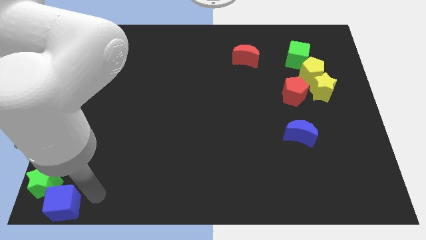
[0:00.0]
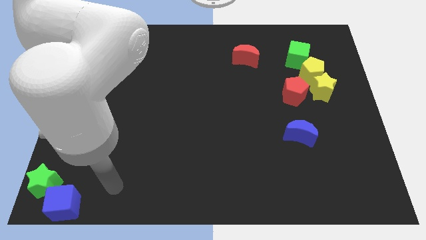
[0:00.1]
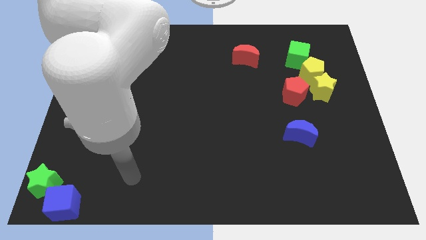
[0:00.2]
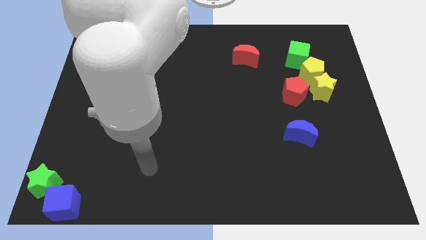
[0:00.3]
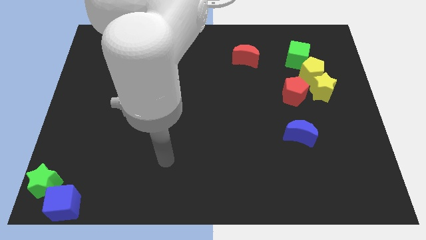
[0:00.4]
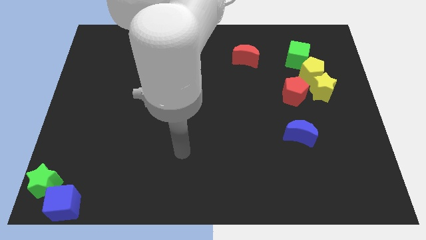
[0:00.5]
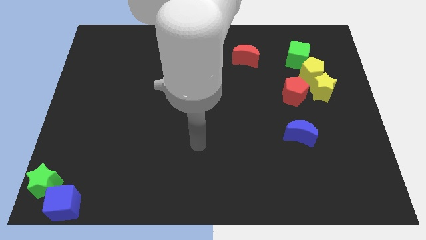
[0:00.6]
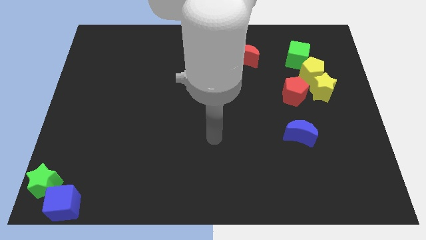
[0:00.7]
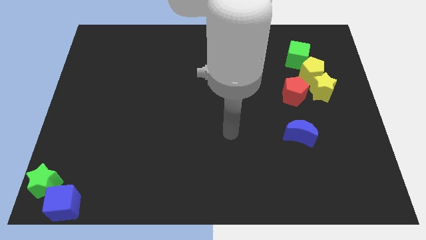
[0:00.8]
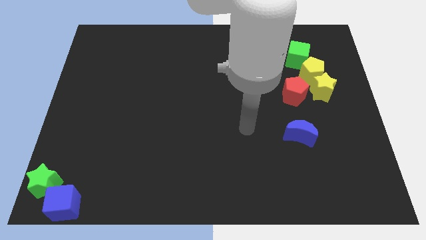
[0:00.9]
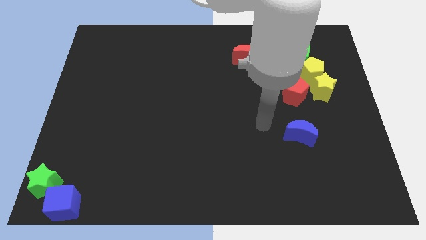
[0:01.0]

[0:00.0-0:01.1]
place the arm at the left side of the blue crescent

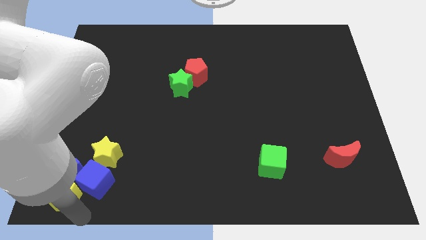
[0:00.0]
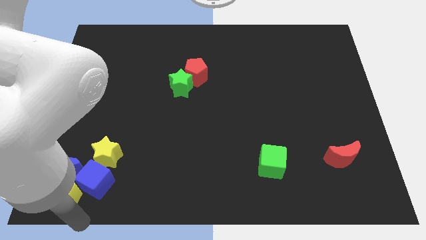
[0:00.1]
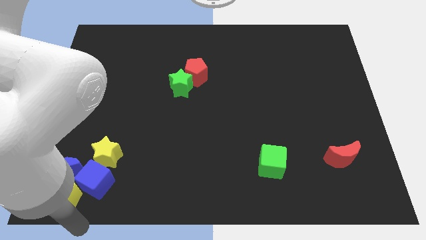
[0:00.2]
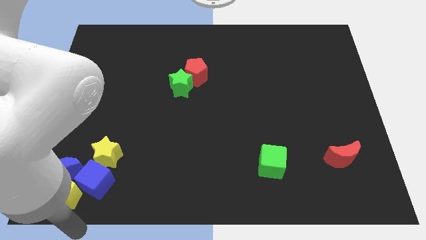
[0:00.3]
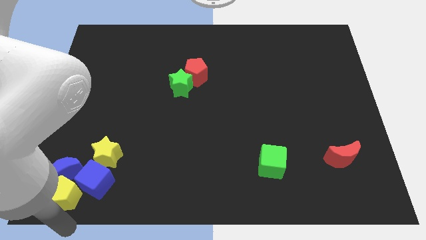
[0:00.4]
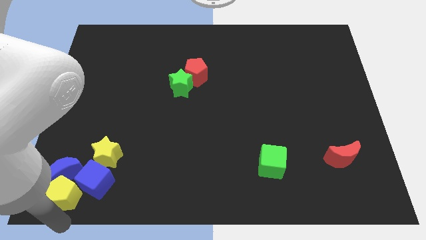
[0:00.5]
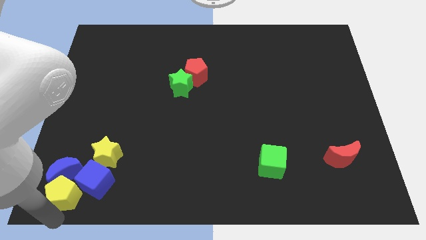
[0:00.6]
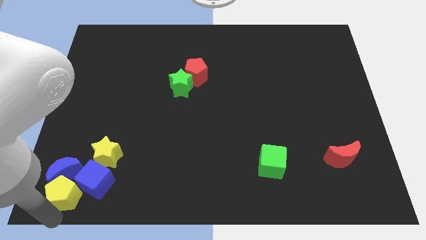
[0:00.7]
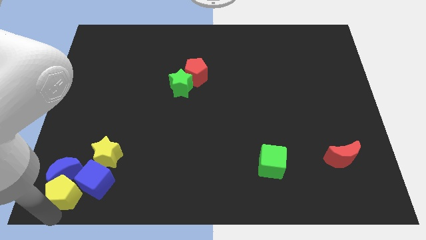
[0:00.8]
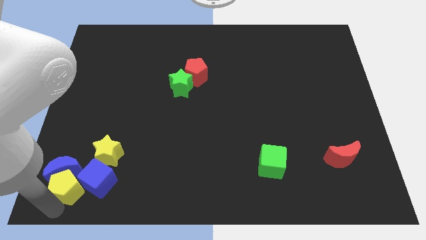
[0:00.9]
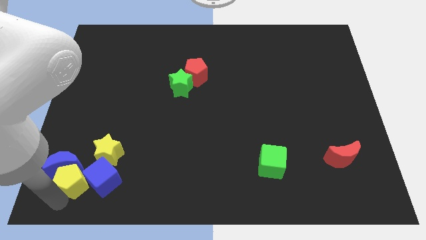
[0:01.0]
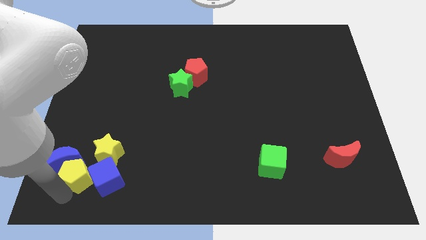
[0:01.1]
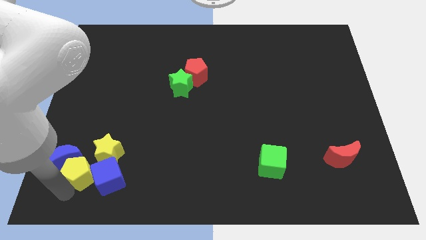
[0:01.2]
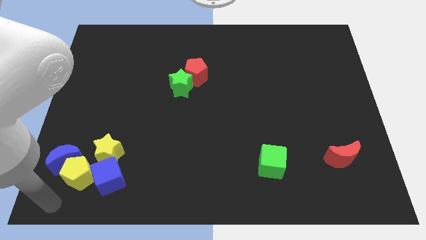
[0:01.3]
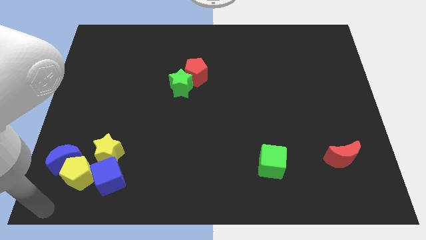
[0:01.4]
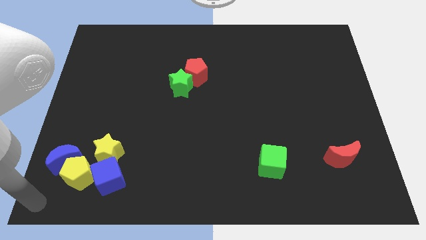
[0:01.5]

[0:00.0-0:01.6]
move yellow pentagon in between blue cube and blue crescent

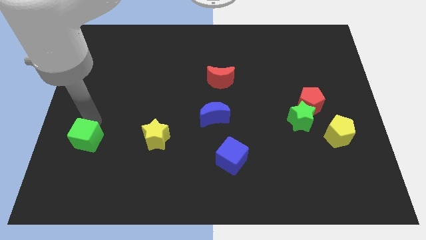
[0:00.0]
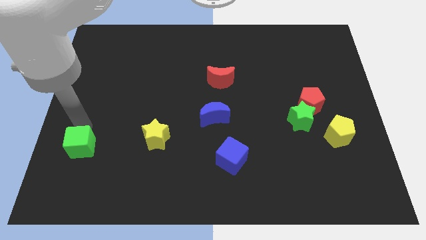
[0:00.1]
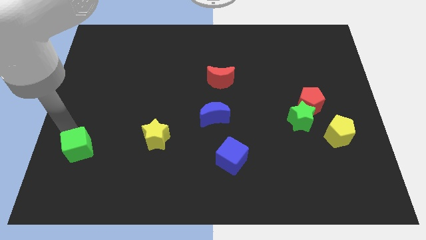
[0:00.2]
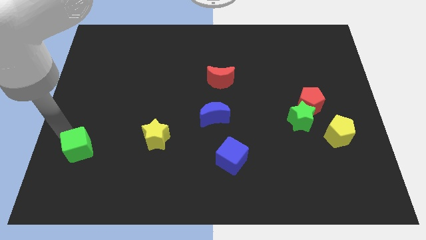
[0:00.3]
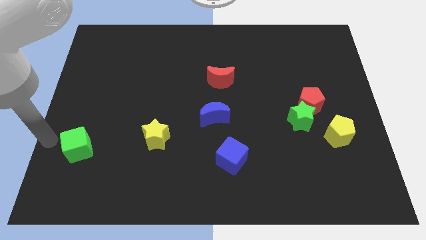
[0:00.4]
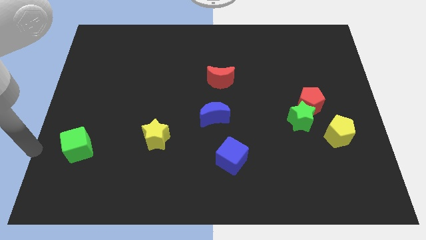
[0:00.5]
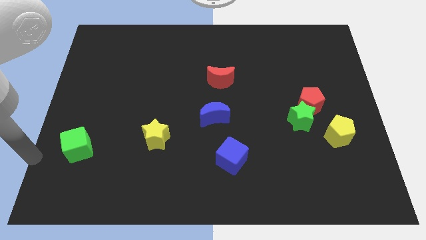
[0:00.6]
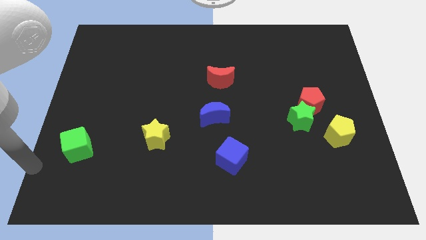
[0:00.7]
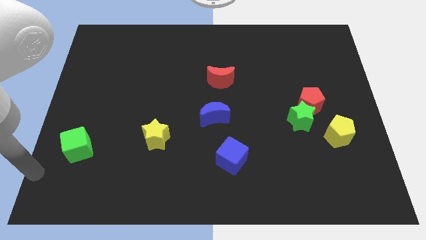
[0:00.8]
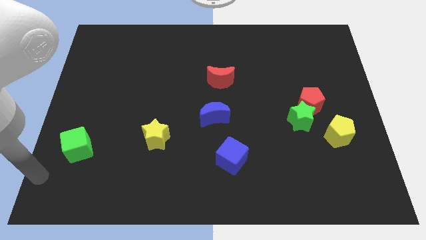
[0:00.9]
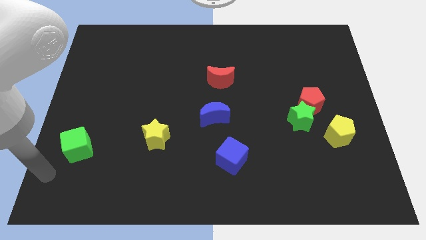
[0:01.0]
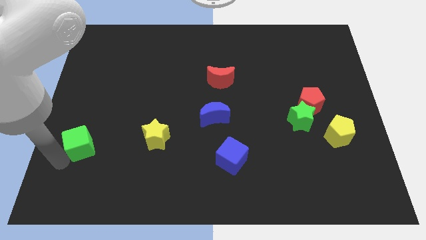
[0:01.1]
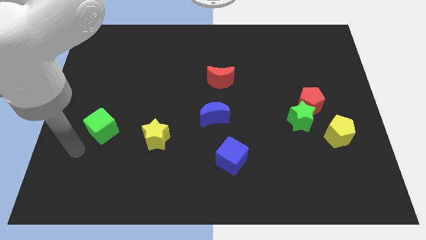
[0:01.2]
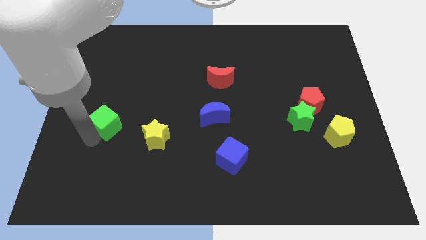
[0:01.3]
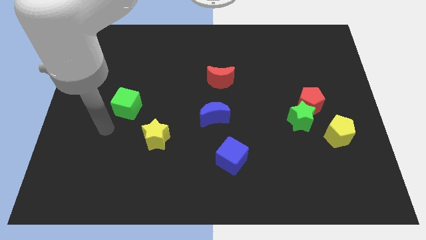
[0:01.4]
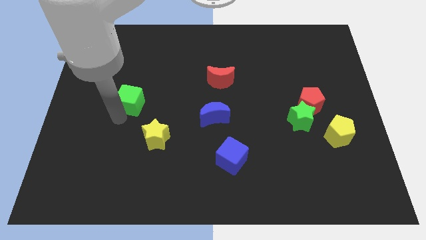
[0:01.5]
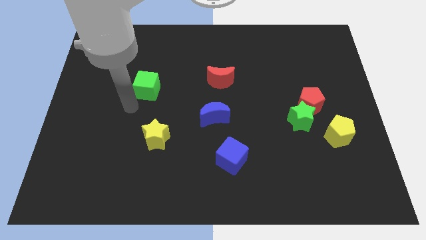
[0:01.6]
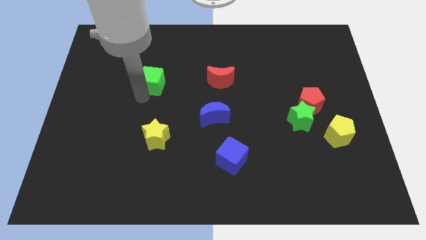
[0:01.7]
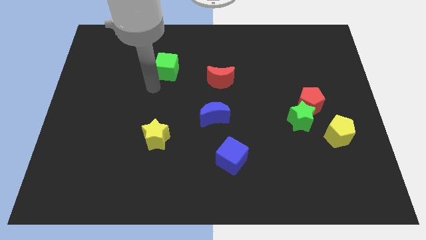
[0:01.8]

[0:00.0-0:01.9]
slide the green cube vertically above the yellow star

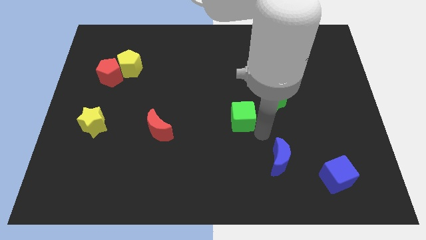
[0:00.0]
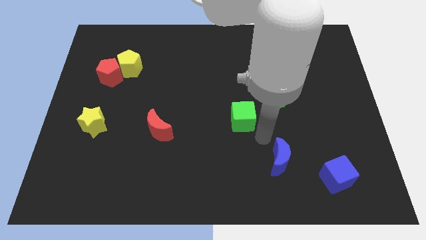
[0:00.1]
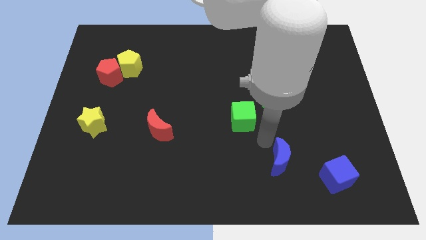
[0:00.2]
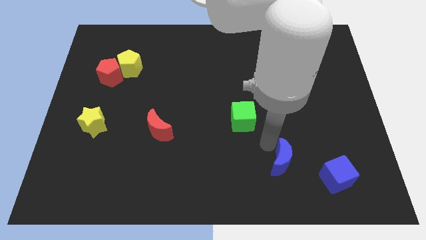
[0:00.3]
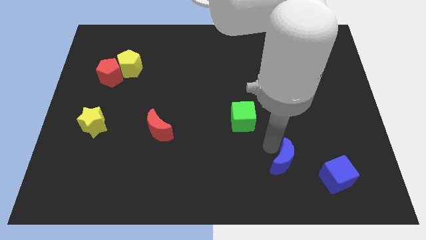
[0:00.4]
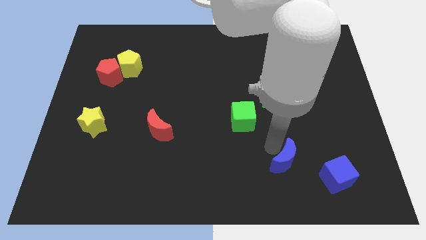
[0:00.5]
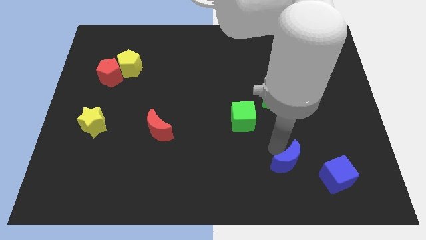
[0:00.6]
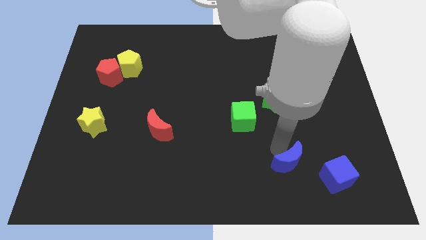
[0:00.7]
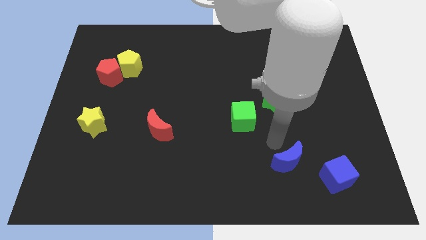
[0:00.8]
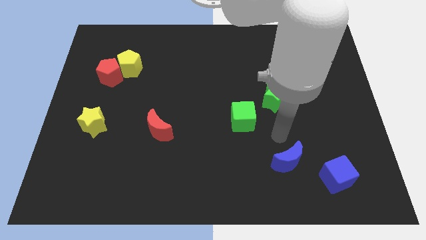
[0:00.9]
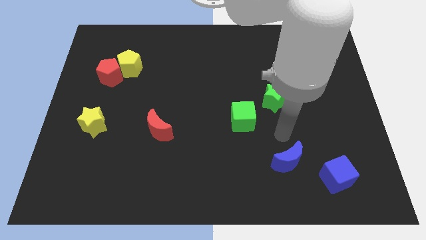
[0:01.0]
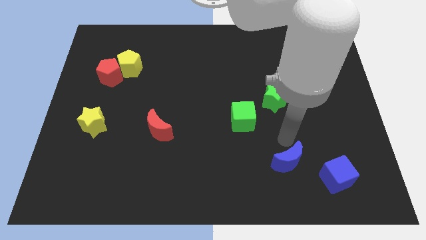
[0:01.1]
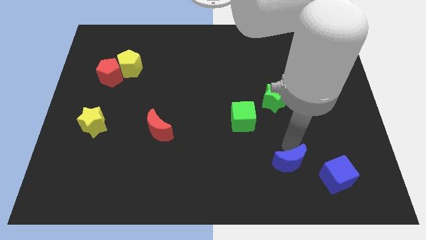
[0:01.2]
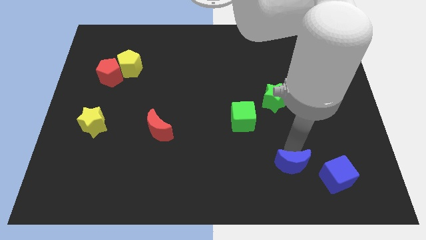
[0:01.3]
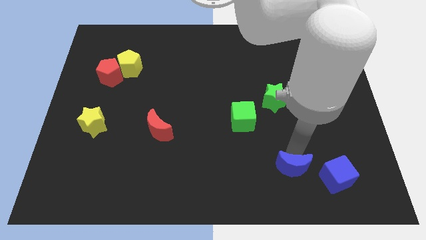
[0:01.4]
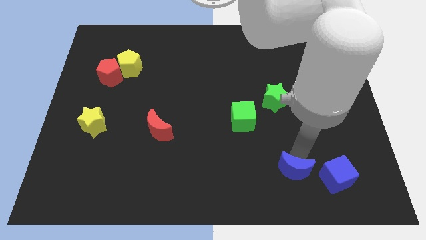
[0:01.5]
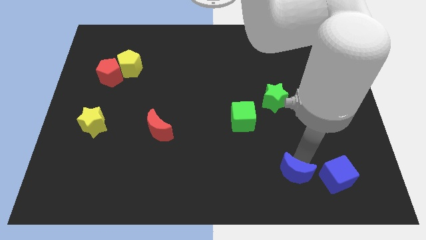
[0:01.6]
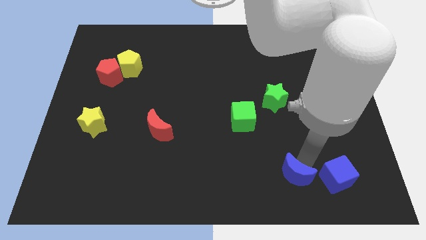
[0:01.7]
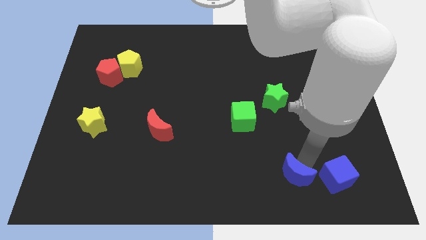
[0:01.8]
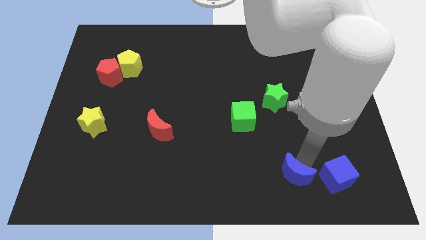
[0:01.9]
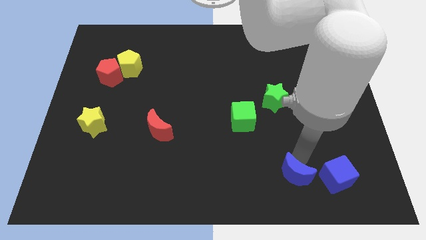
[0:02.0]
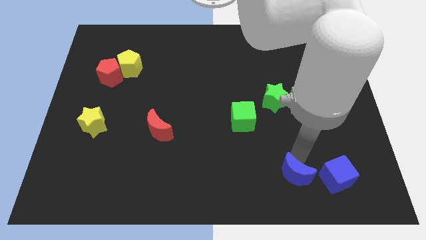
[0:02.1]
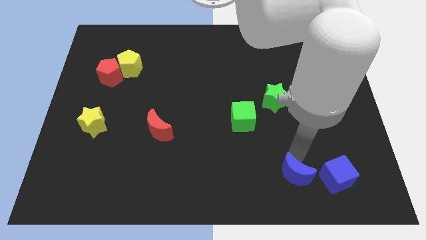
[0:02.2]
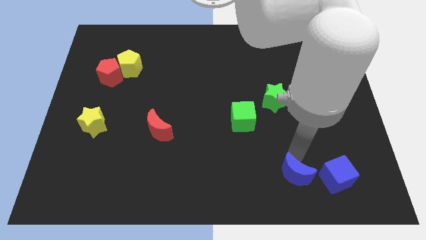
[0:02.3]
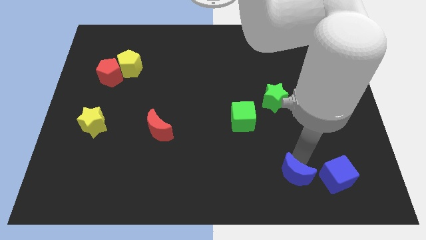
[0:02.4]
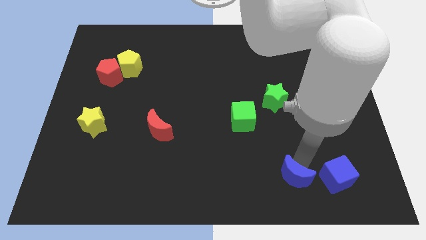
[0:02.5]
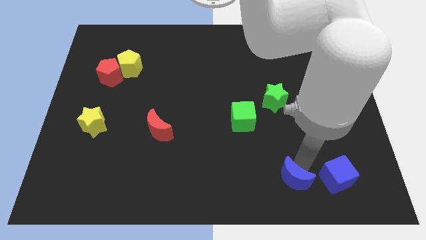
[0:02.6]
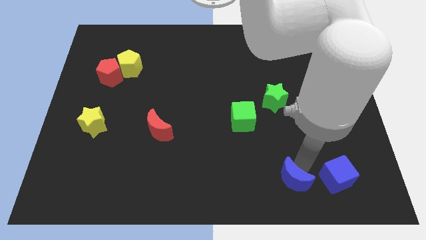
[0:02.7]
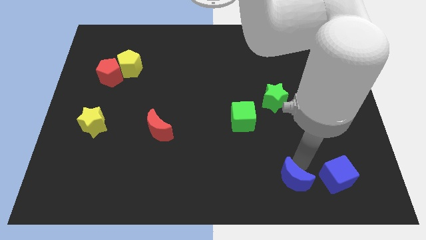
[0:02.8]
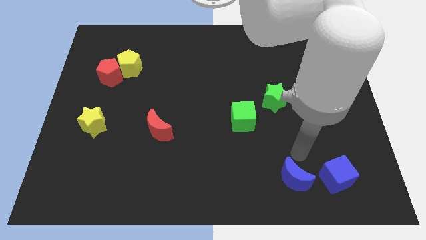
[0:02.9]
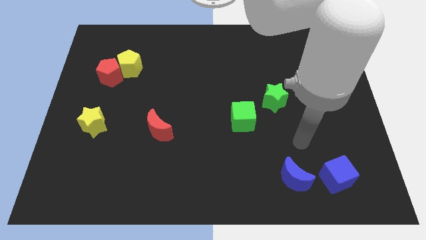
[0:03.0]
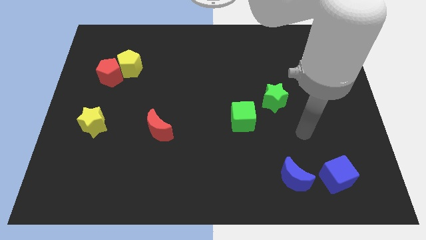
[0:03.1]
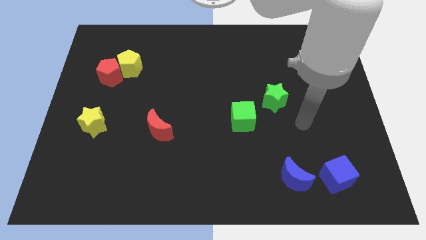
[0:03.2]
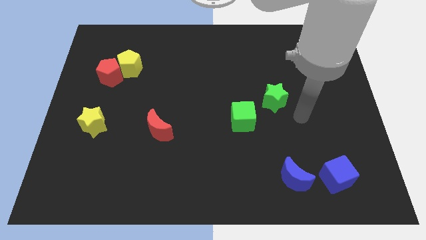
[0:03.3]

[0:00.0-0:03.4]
move the blue crescent left side to the blue cube

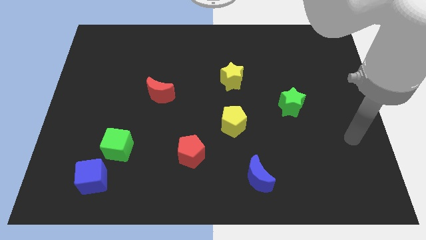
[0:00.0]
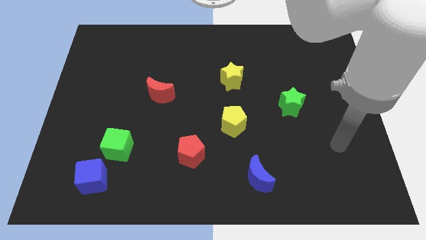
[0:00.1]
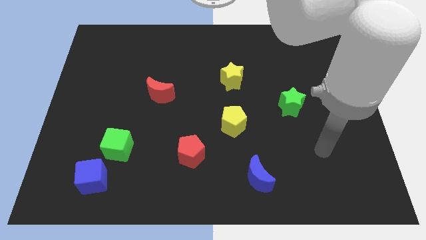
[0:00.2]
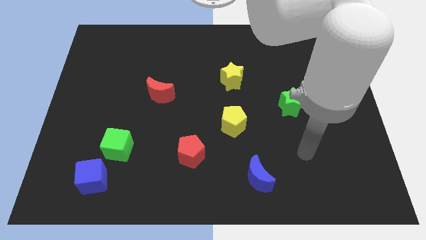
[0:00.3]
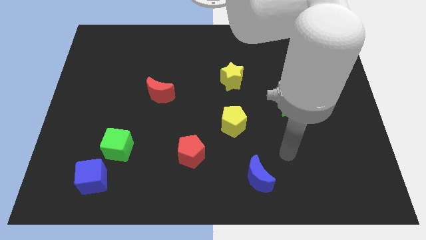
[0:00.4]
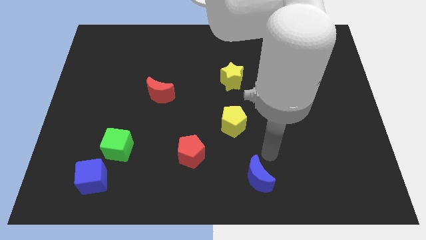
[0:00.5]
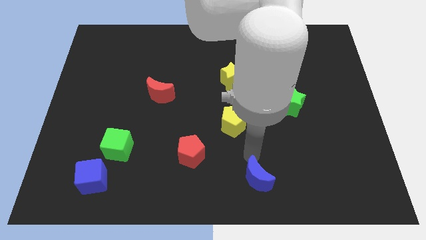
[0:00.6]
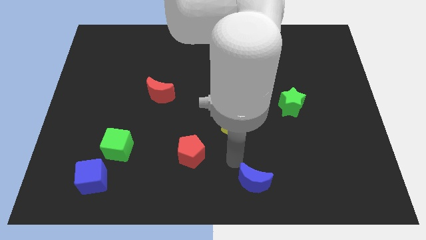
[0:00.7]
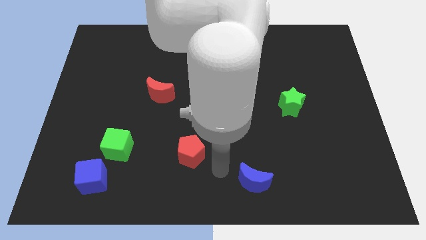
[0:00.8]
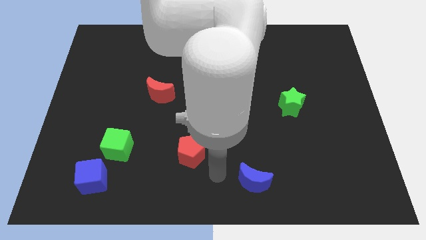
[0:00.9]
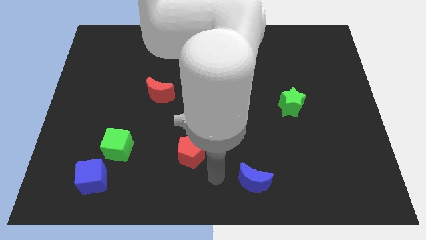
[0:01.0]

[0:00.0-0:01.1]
move the blue crescent slightly
